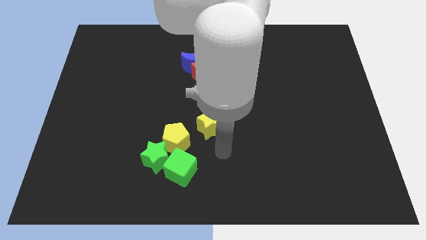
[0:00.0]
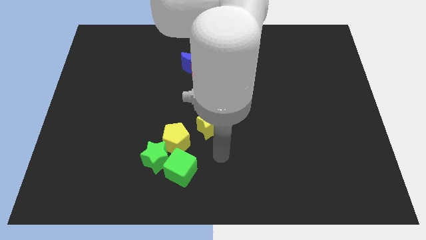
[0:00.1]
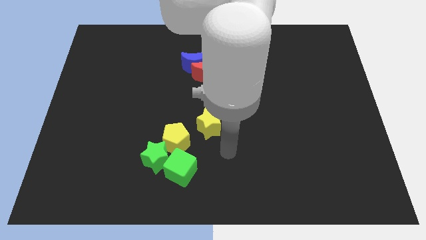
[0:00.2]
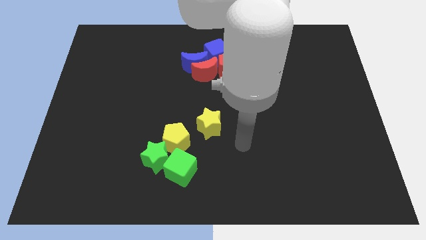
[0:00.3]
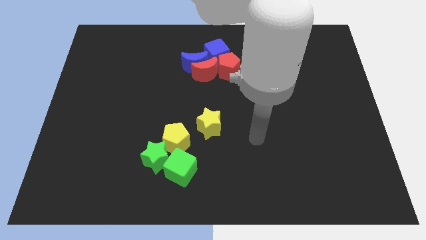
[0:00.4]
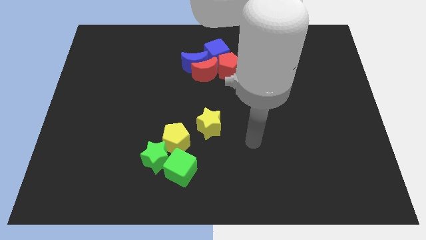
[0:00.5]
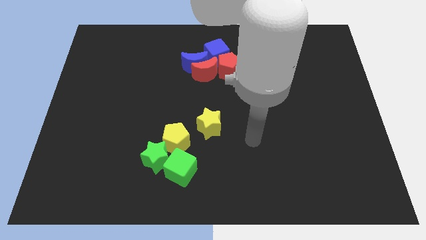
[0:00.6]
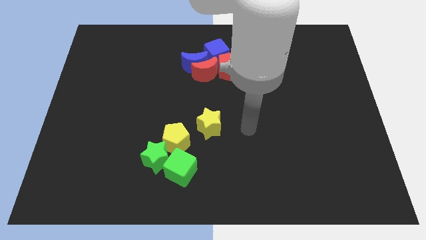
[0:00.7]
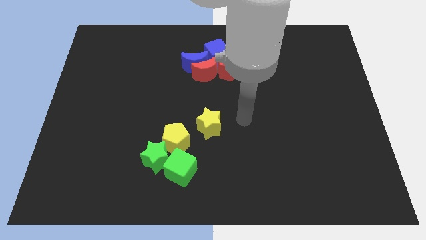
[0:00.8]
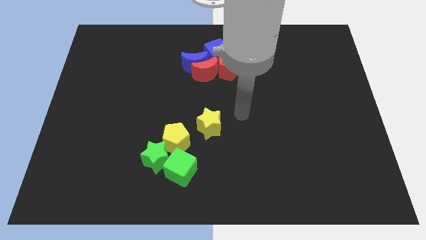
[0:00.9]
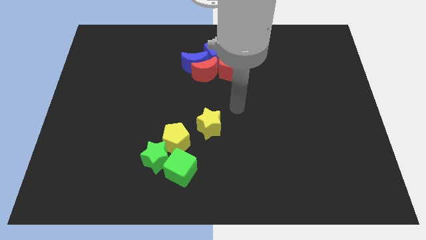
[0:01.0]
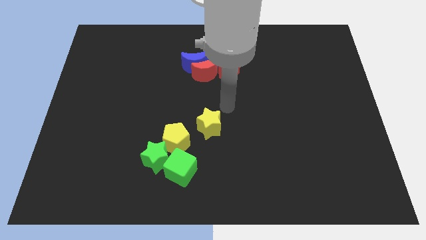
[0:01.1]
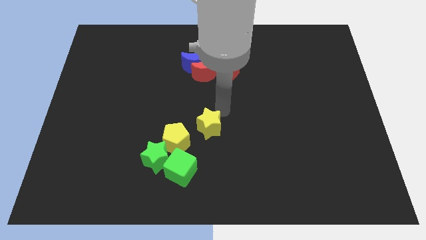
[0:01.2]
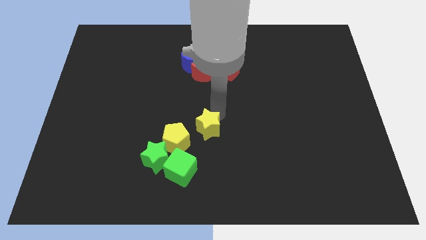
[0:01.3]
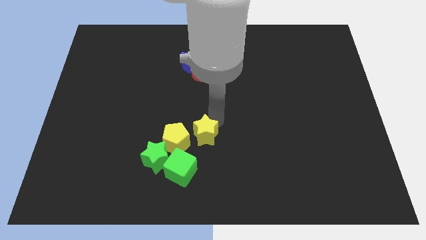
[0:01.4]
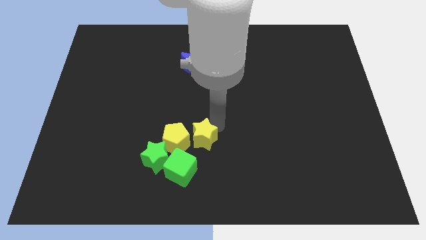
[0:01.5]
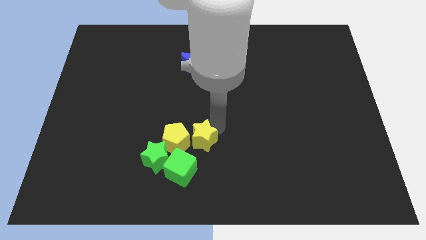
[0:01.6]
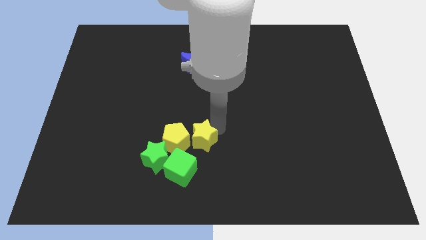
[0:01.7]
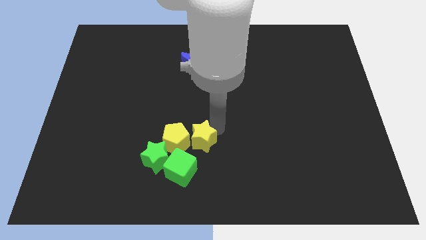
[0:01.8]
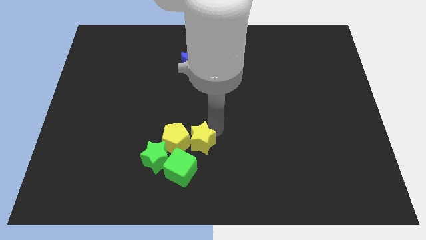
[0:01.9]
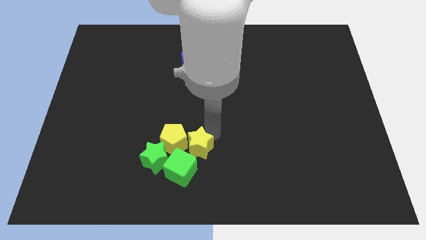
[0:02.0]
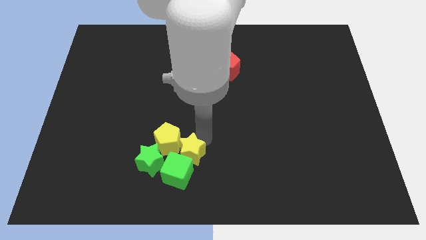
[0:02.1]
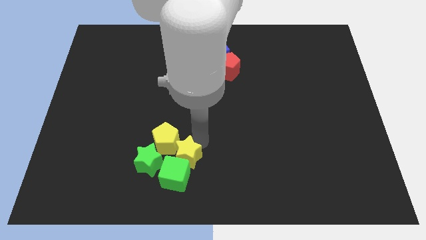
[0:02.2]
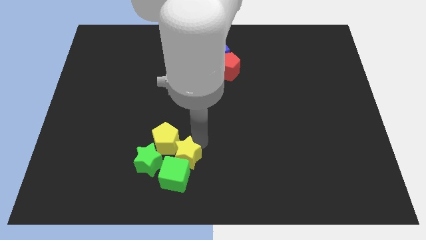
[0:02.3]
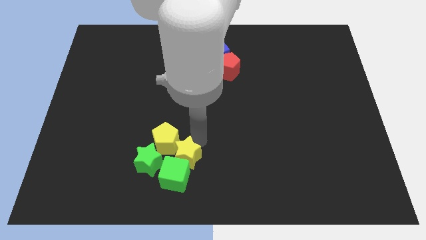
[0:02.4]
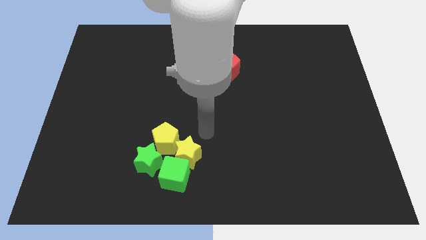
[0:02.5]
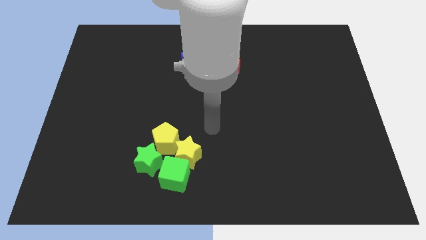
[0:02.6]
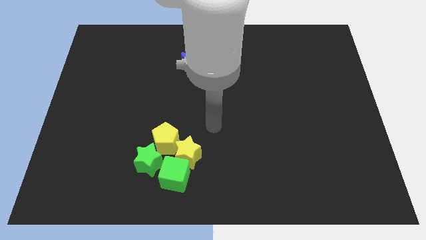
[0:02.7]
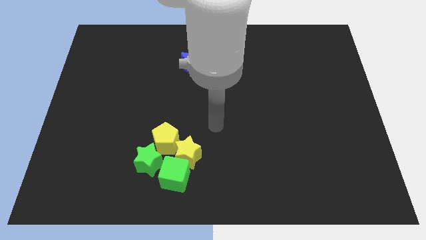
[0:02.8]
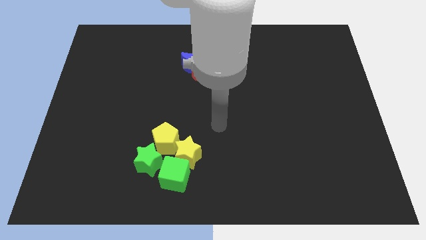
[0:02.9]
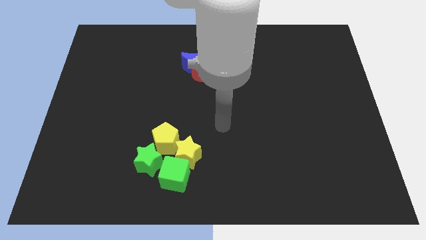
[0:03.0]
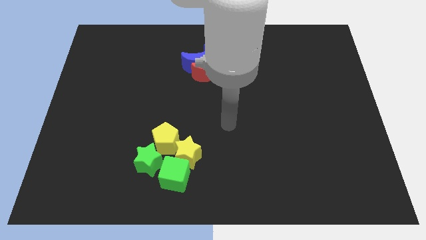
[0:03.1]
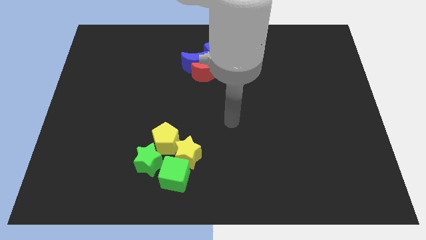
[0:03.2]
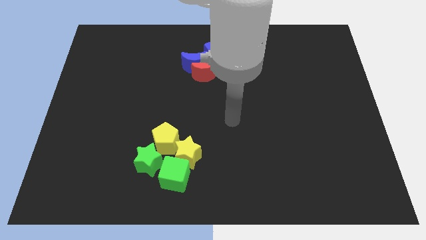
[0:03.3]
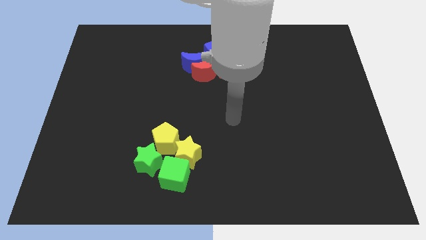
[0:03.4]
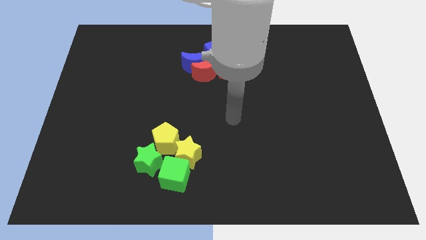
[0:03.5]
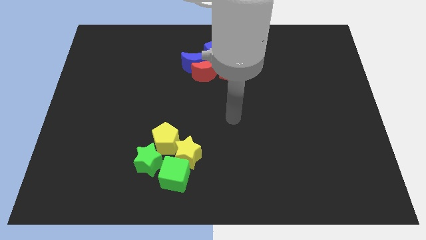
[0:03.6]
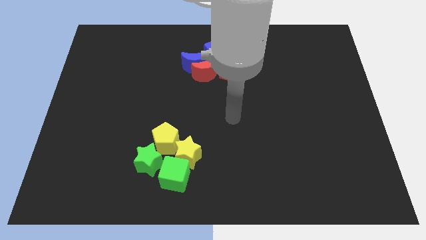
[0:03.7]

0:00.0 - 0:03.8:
push the yellow star into the group of blocks which is at the bottom centre of the board

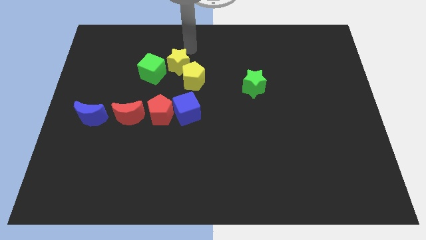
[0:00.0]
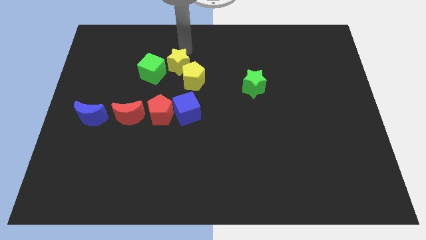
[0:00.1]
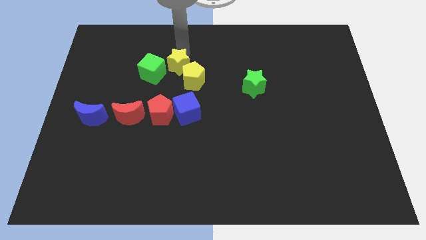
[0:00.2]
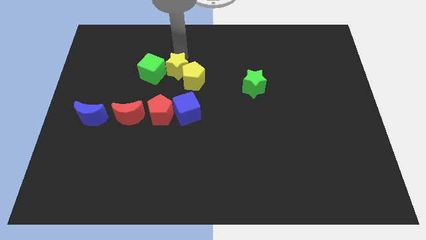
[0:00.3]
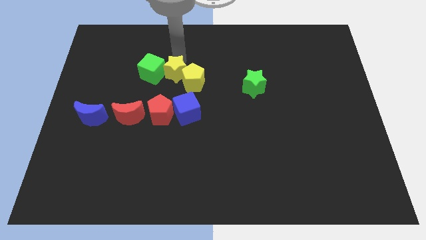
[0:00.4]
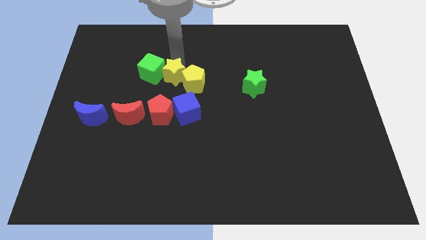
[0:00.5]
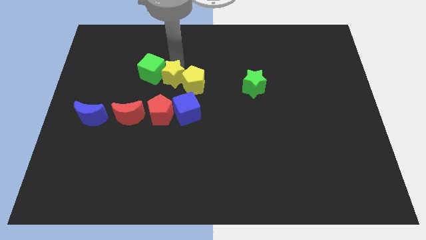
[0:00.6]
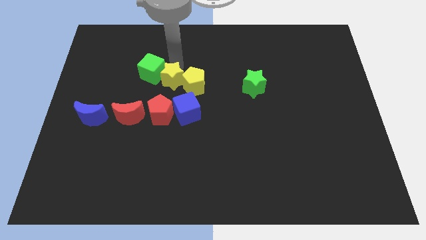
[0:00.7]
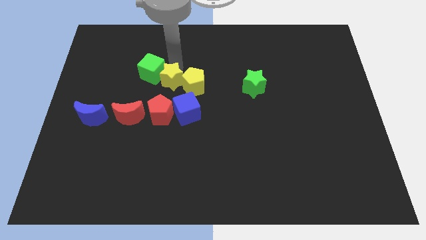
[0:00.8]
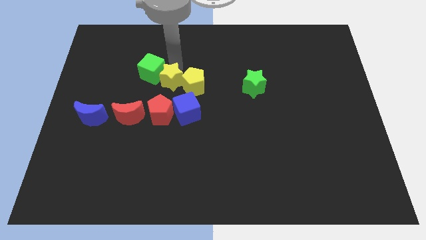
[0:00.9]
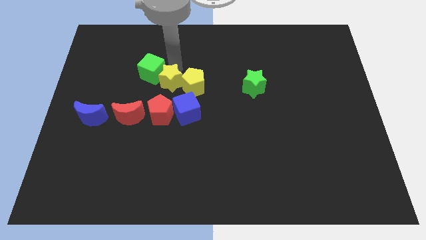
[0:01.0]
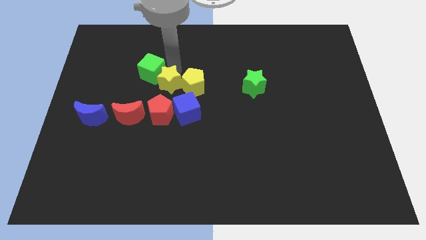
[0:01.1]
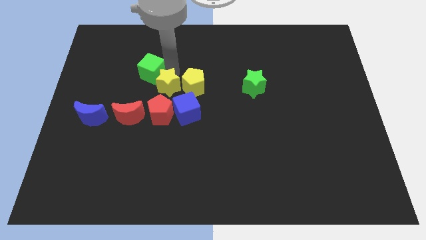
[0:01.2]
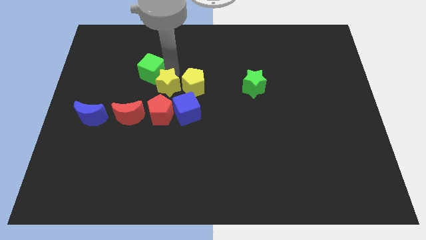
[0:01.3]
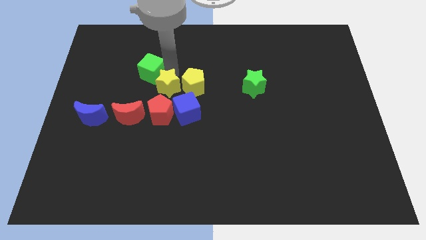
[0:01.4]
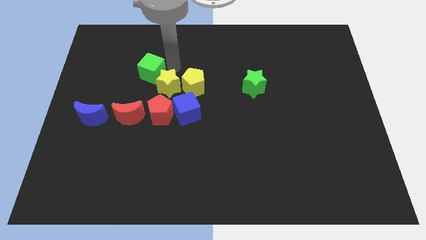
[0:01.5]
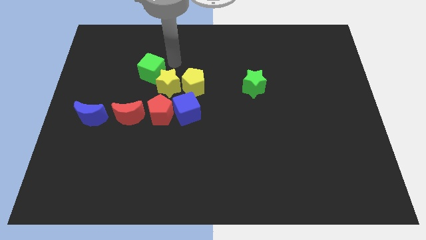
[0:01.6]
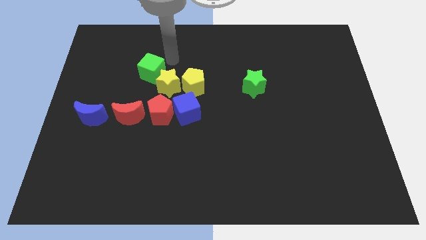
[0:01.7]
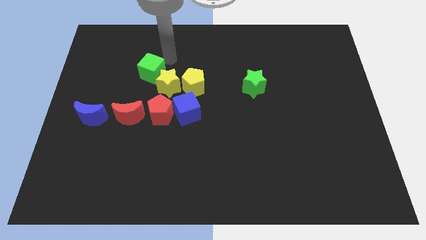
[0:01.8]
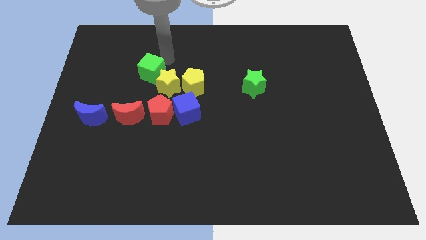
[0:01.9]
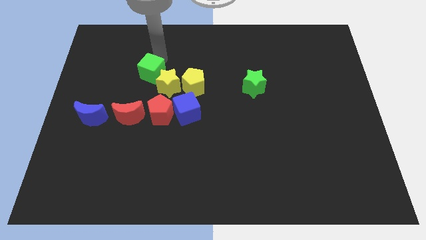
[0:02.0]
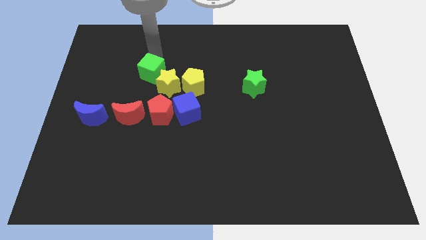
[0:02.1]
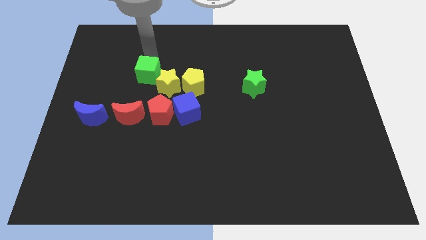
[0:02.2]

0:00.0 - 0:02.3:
push the yellow star towards red pentagon

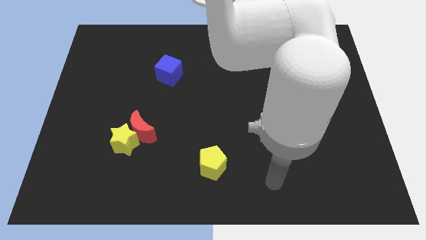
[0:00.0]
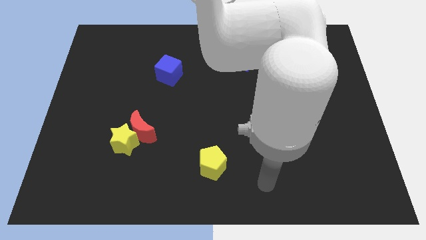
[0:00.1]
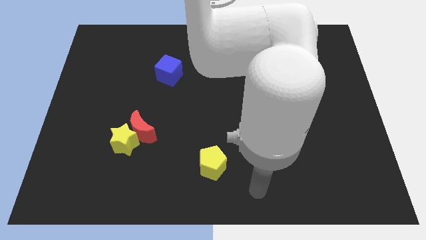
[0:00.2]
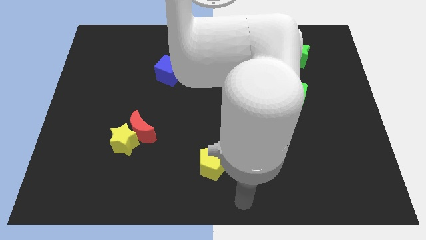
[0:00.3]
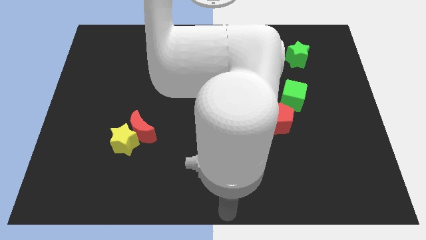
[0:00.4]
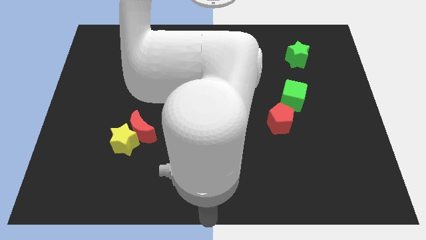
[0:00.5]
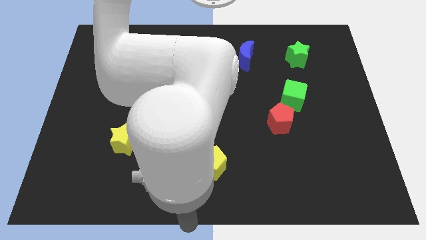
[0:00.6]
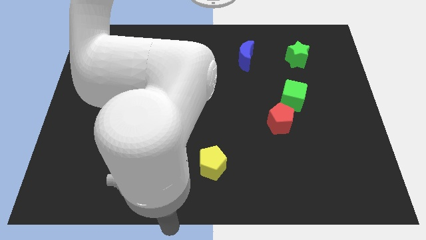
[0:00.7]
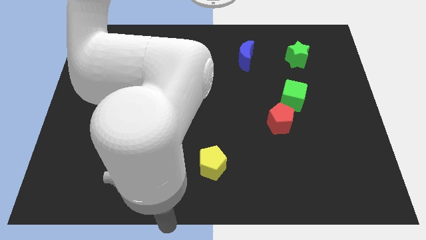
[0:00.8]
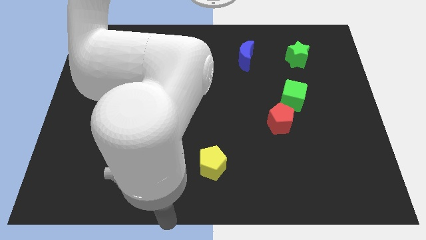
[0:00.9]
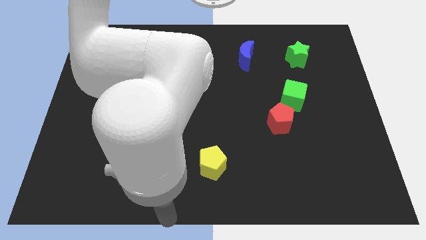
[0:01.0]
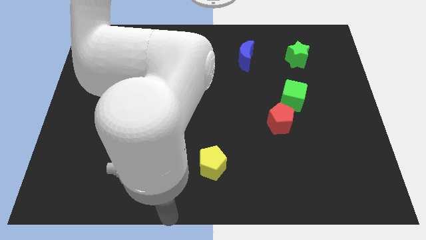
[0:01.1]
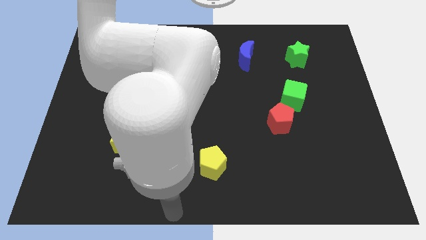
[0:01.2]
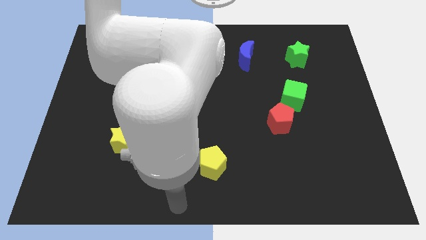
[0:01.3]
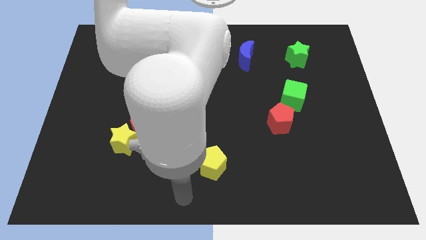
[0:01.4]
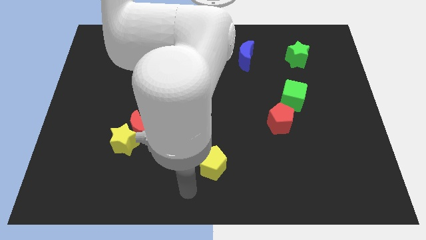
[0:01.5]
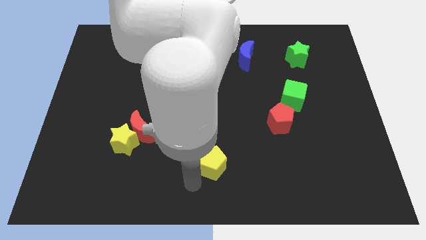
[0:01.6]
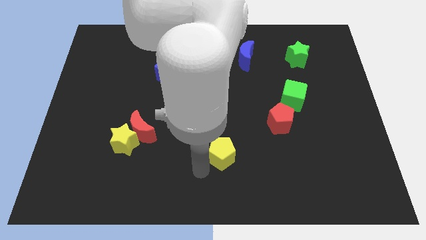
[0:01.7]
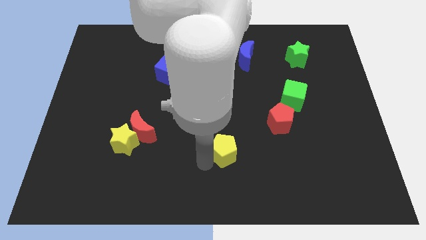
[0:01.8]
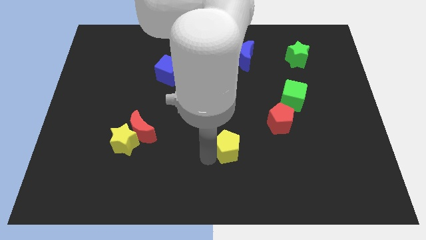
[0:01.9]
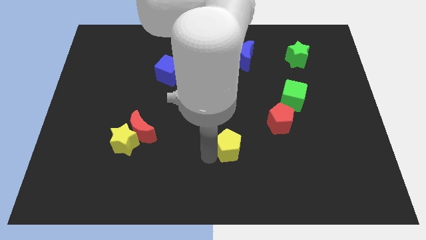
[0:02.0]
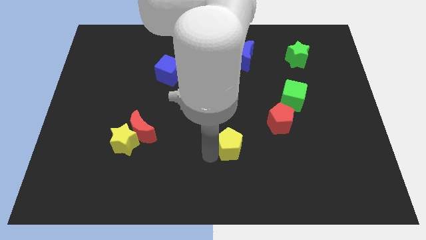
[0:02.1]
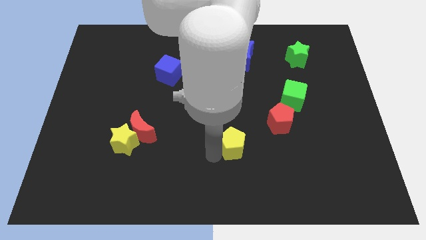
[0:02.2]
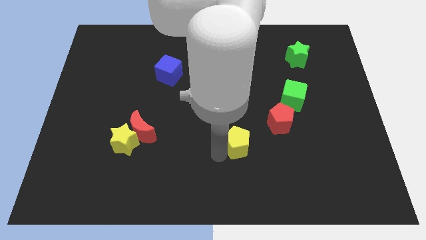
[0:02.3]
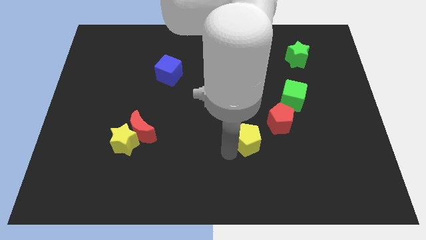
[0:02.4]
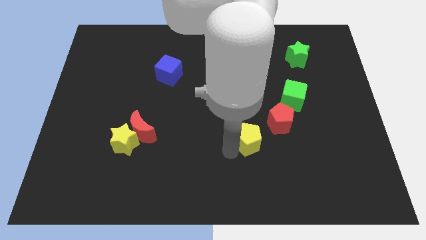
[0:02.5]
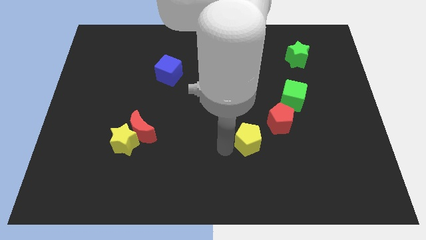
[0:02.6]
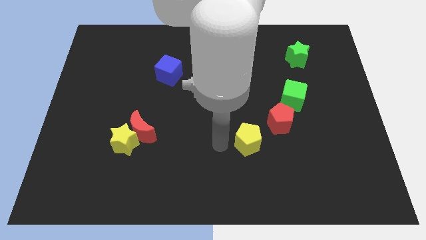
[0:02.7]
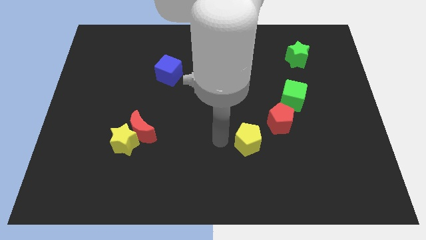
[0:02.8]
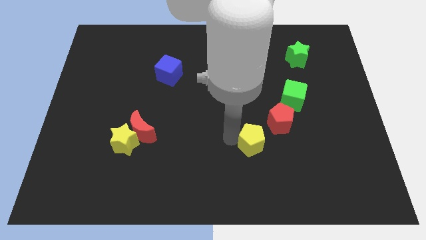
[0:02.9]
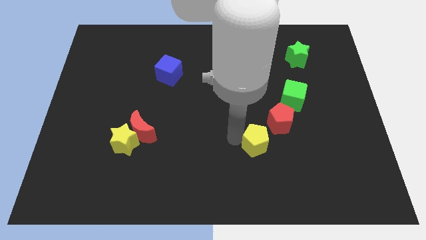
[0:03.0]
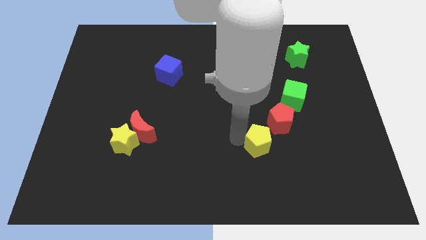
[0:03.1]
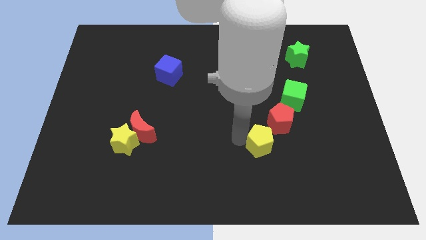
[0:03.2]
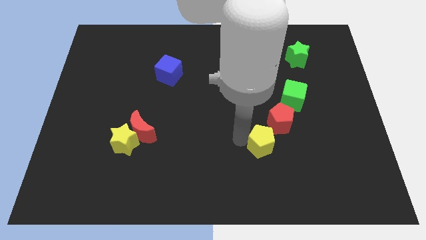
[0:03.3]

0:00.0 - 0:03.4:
place the yellow pentagon at the bottom left side of red pentagon
